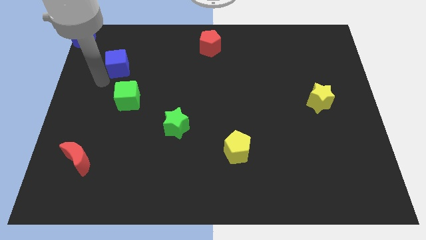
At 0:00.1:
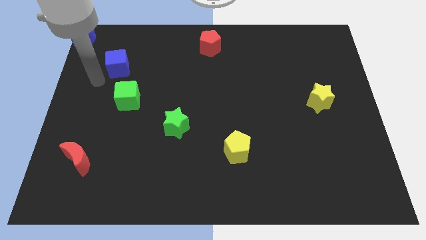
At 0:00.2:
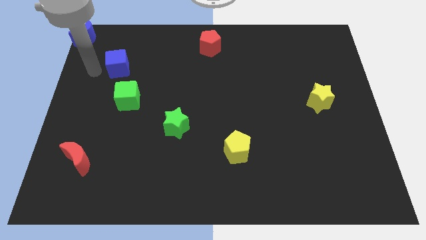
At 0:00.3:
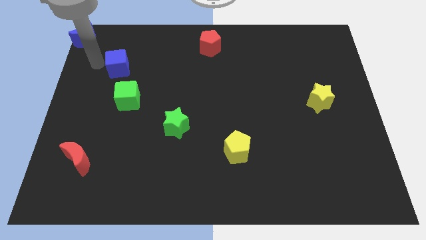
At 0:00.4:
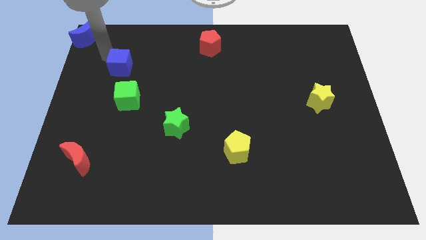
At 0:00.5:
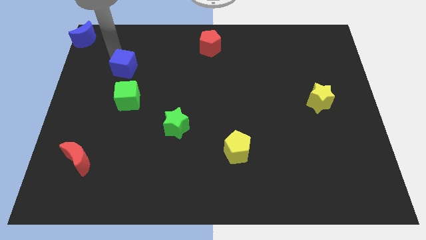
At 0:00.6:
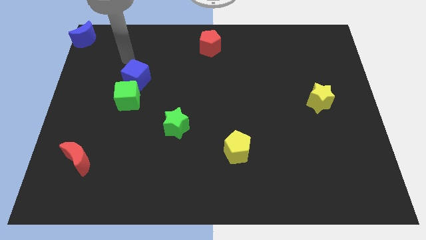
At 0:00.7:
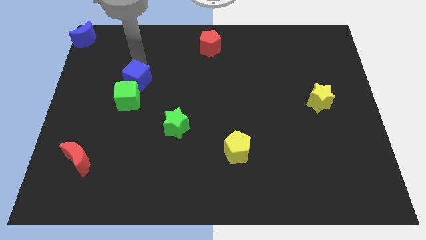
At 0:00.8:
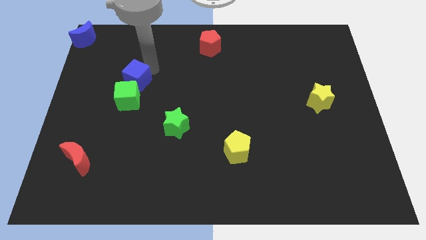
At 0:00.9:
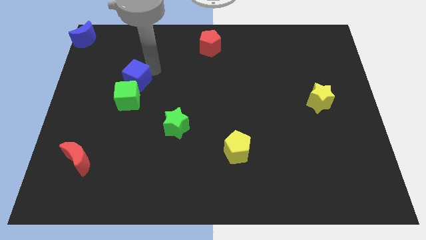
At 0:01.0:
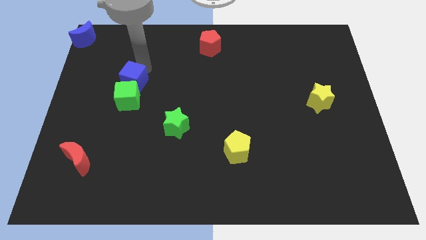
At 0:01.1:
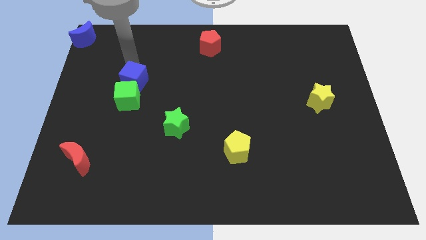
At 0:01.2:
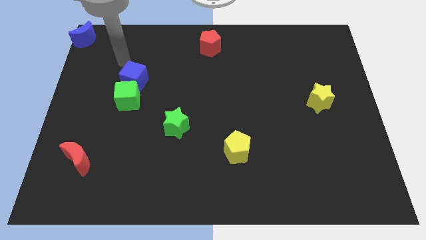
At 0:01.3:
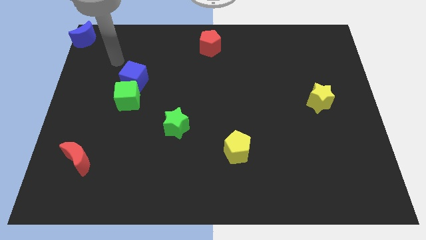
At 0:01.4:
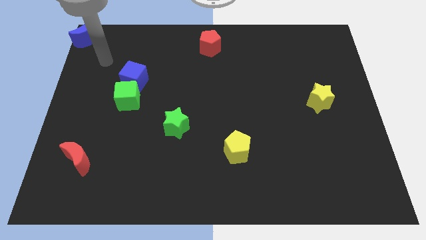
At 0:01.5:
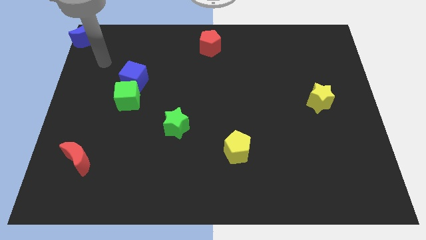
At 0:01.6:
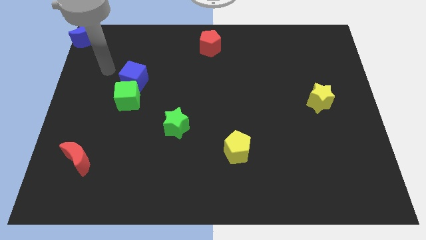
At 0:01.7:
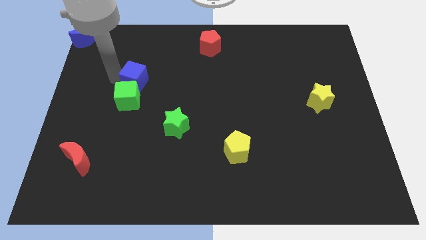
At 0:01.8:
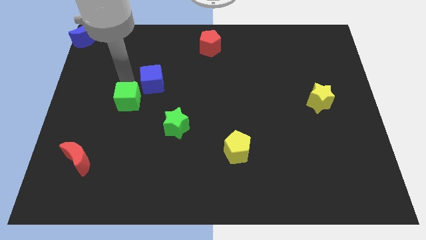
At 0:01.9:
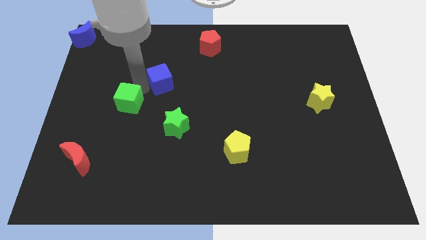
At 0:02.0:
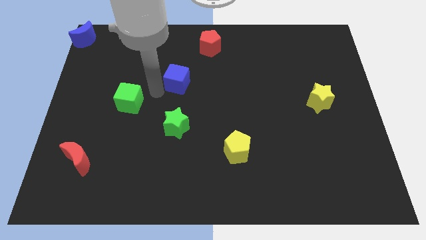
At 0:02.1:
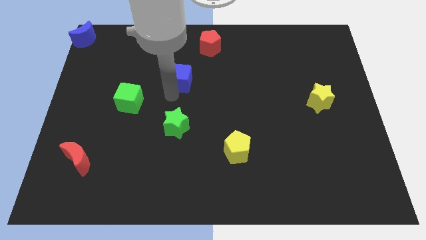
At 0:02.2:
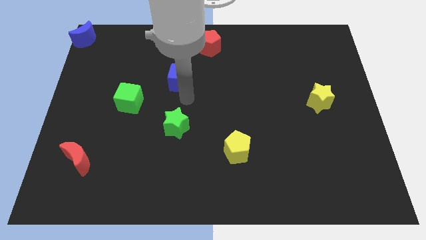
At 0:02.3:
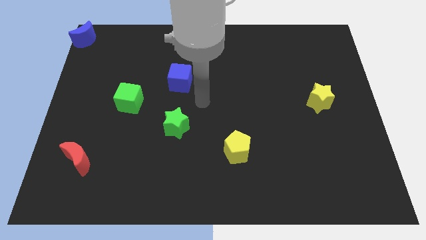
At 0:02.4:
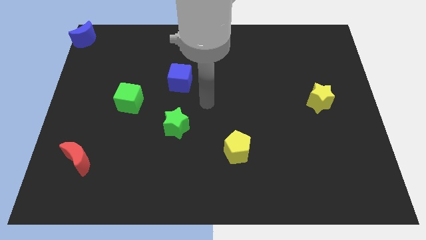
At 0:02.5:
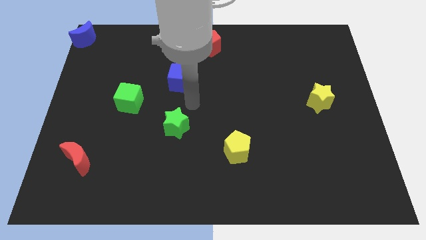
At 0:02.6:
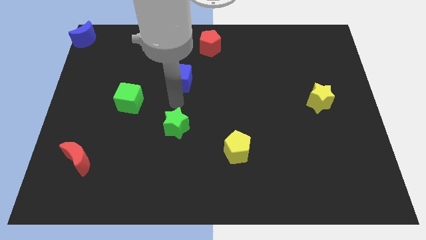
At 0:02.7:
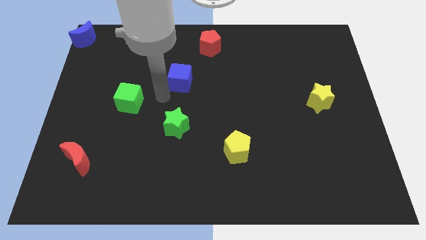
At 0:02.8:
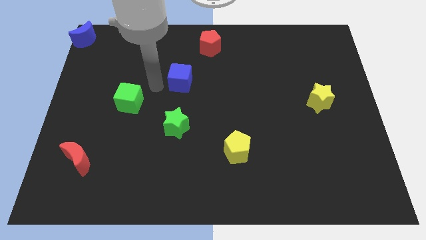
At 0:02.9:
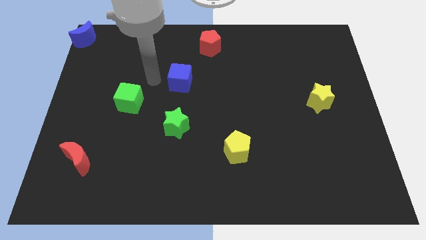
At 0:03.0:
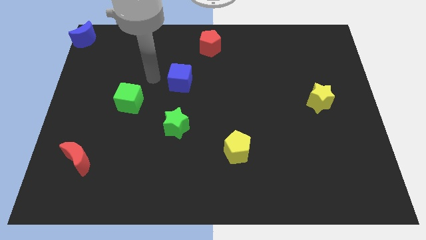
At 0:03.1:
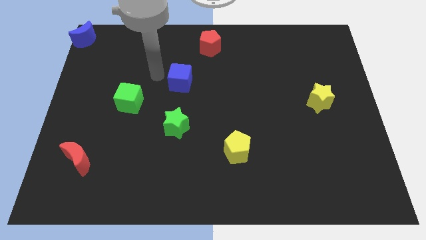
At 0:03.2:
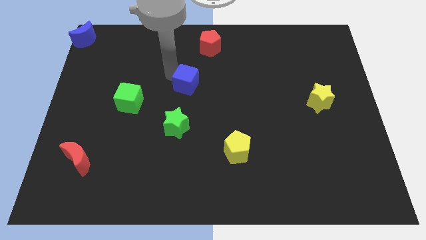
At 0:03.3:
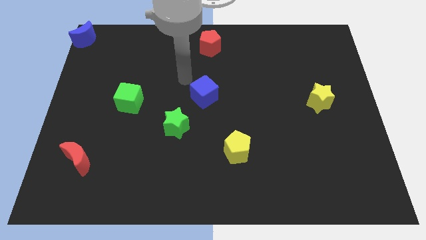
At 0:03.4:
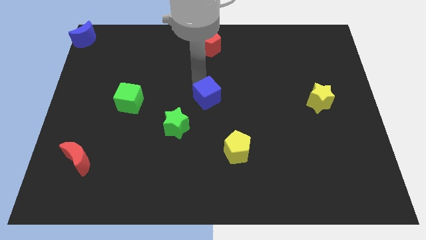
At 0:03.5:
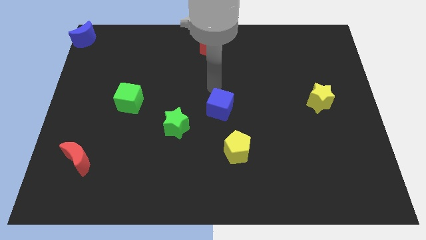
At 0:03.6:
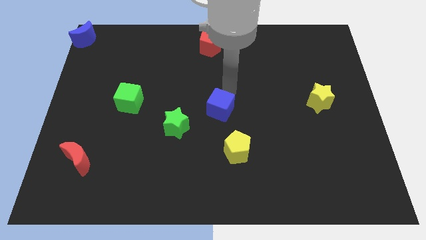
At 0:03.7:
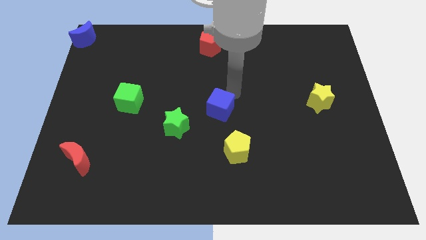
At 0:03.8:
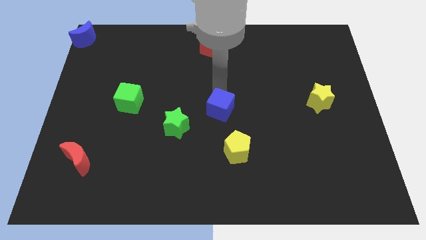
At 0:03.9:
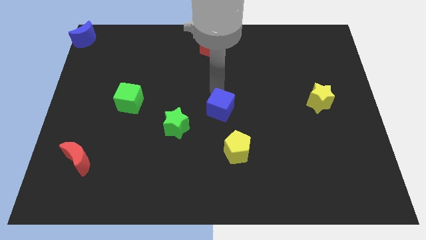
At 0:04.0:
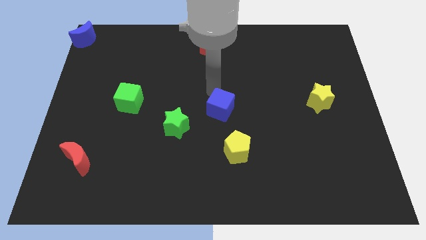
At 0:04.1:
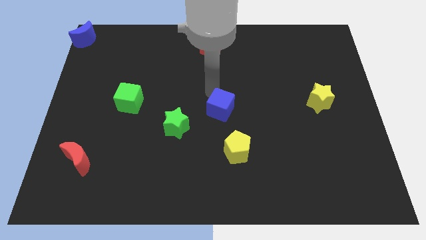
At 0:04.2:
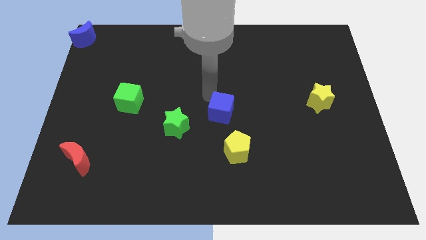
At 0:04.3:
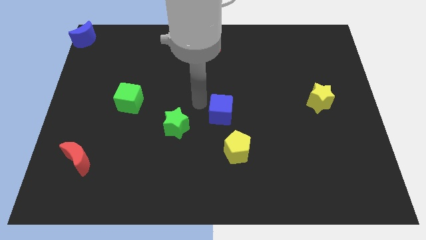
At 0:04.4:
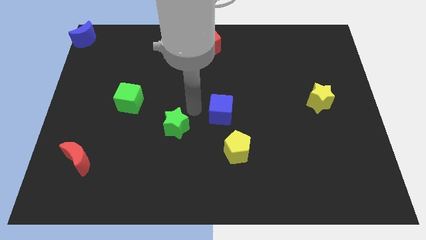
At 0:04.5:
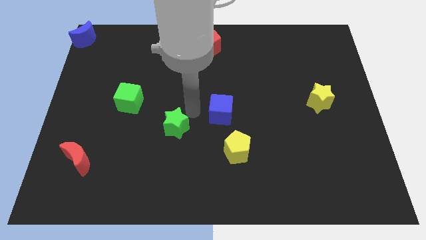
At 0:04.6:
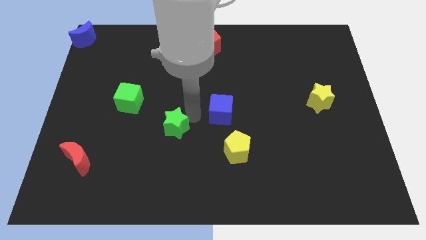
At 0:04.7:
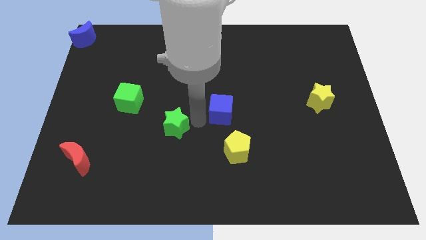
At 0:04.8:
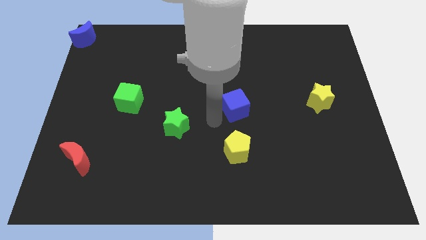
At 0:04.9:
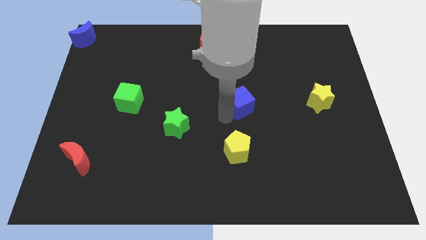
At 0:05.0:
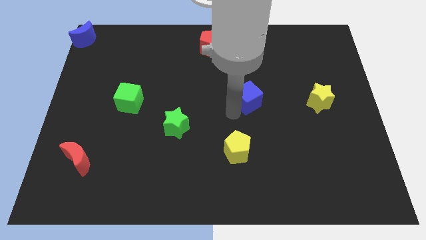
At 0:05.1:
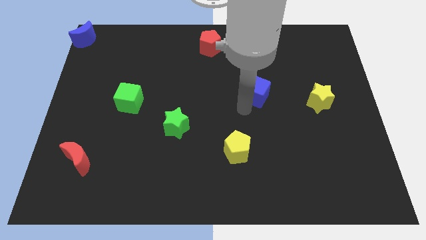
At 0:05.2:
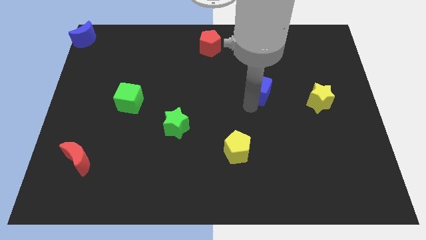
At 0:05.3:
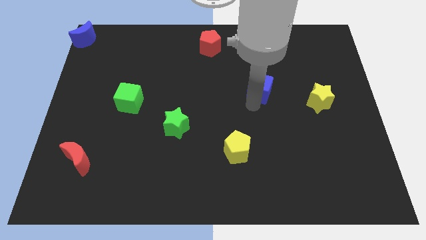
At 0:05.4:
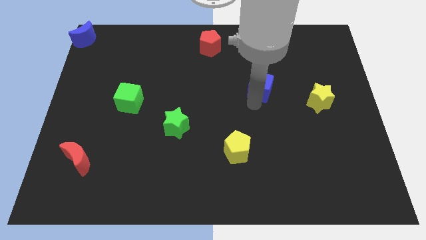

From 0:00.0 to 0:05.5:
slide the blue cube to the left of the yellow star

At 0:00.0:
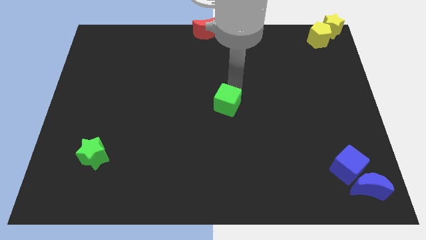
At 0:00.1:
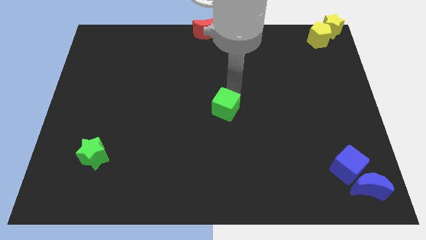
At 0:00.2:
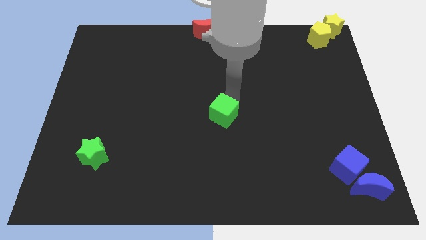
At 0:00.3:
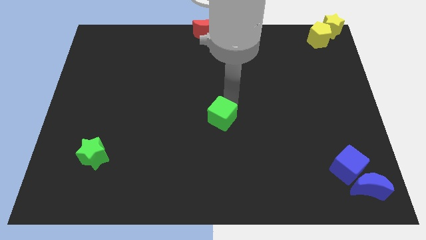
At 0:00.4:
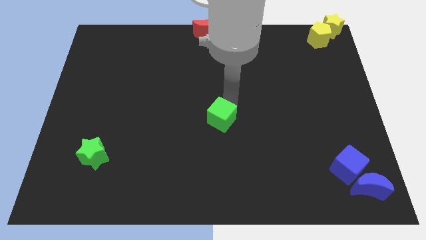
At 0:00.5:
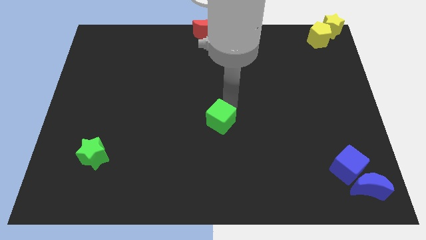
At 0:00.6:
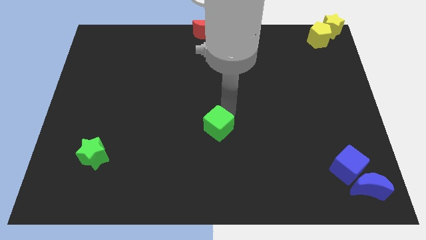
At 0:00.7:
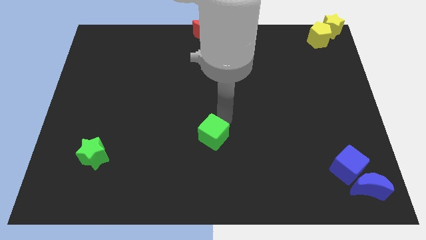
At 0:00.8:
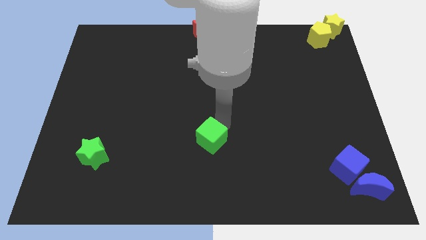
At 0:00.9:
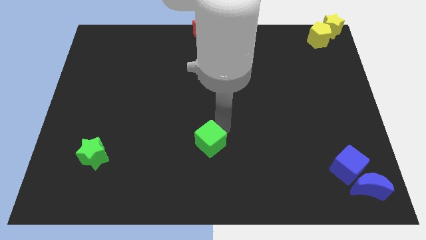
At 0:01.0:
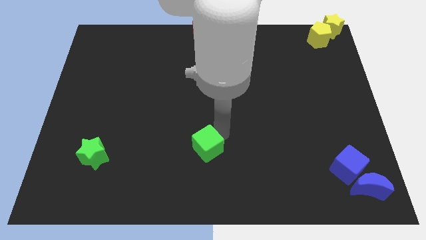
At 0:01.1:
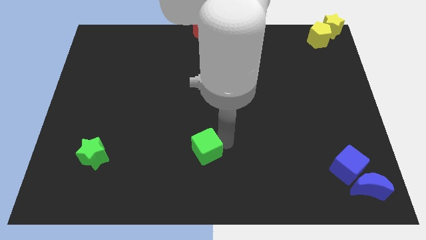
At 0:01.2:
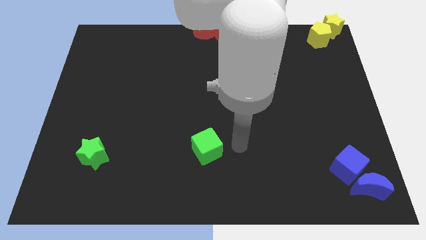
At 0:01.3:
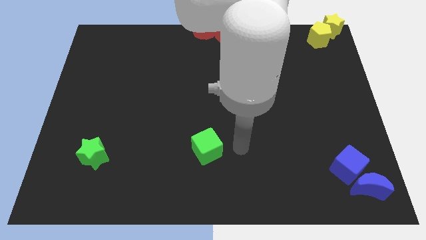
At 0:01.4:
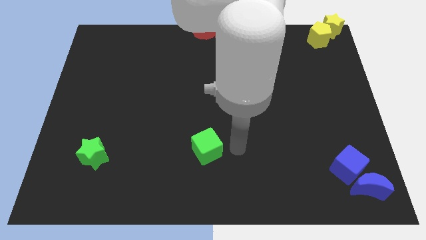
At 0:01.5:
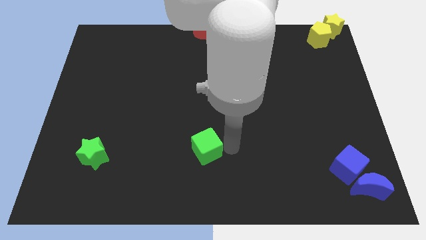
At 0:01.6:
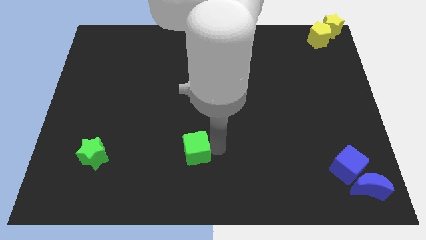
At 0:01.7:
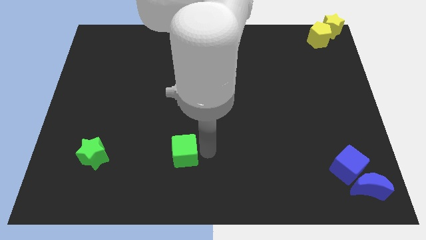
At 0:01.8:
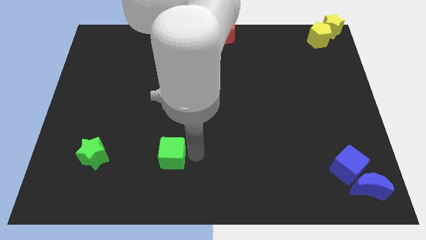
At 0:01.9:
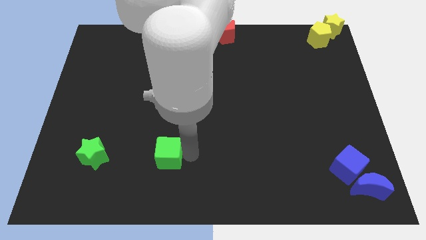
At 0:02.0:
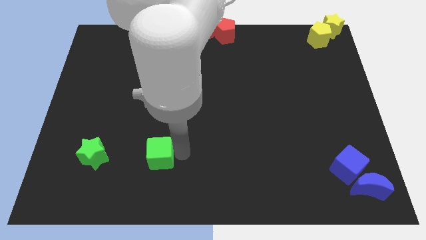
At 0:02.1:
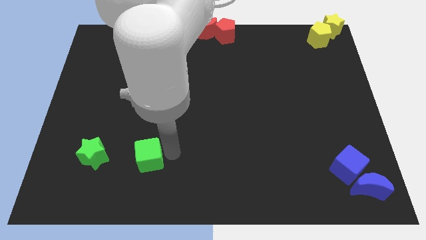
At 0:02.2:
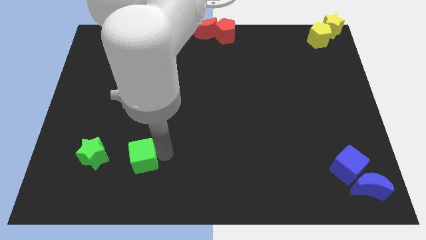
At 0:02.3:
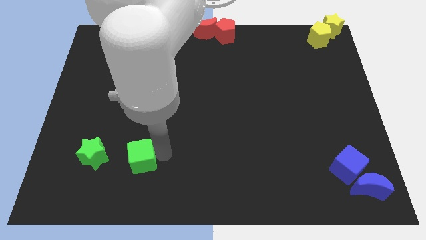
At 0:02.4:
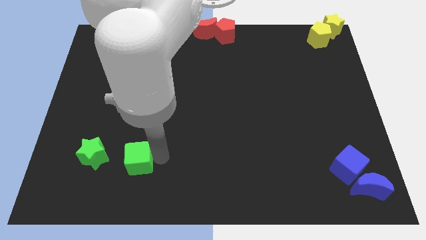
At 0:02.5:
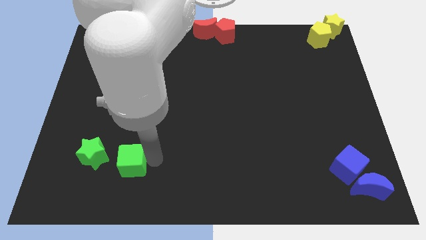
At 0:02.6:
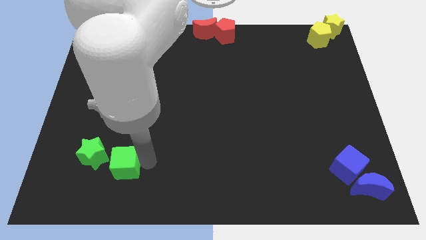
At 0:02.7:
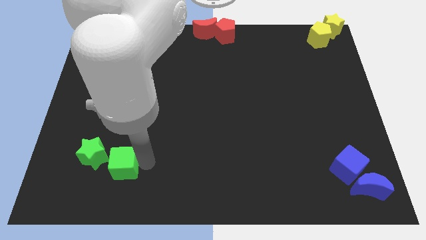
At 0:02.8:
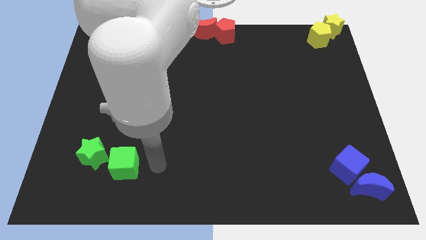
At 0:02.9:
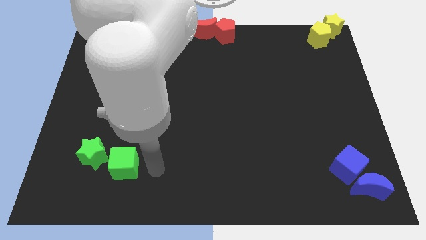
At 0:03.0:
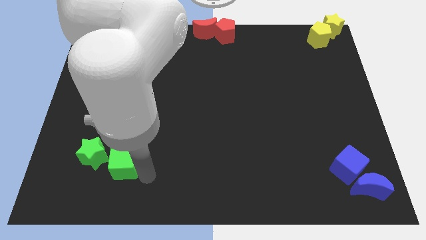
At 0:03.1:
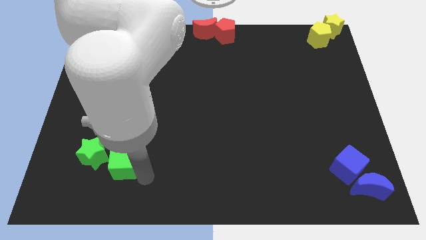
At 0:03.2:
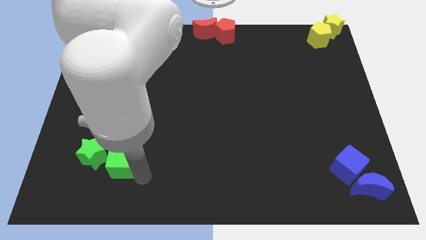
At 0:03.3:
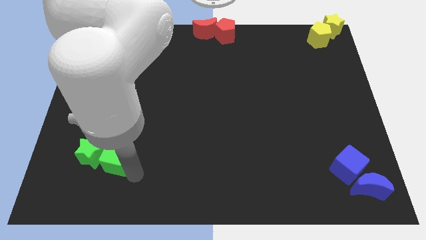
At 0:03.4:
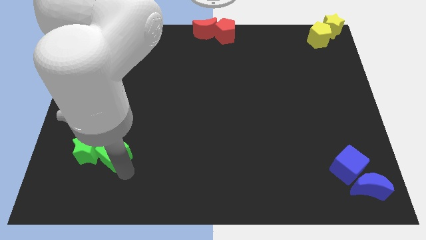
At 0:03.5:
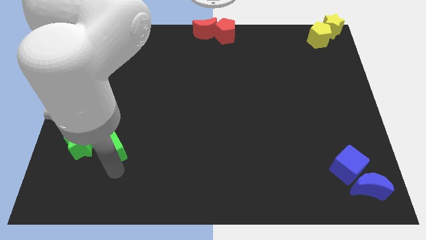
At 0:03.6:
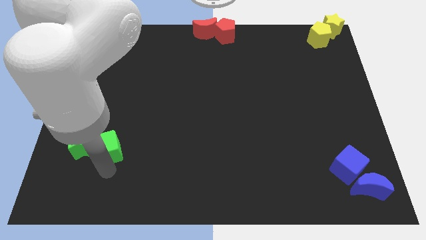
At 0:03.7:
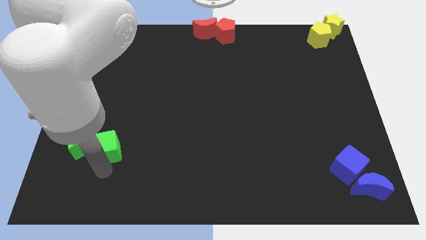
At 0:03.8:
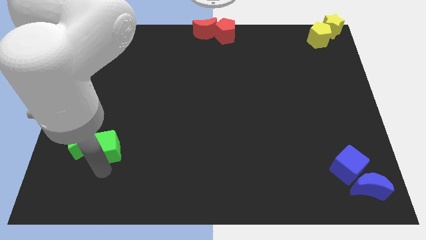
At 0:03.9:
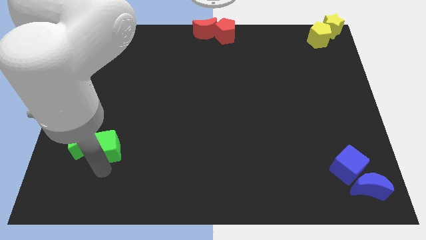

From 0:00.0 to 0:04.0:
push the green cube into green star
